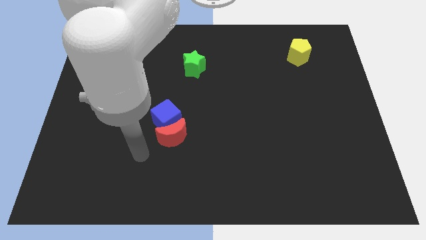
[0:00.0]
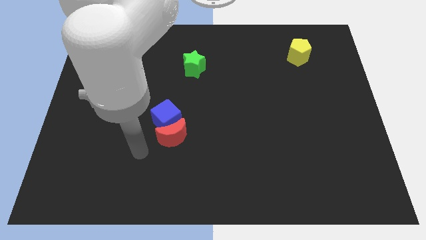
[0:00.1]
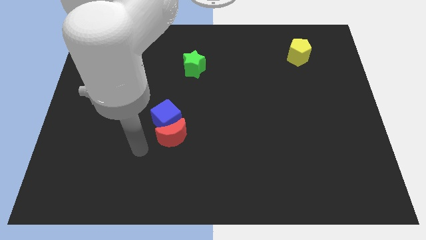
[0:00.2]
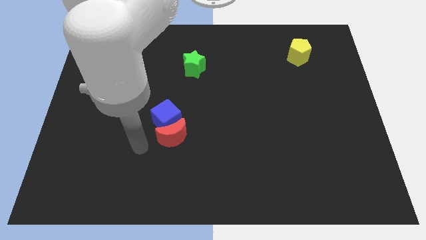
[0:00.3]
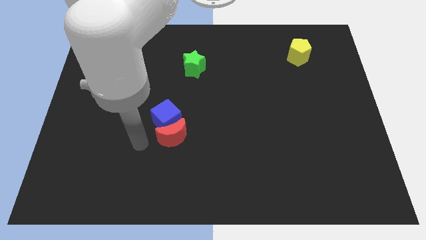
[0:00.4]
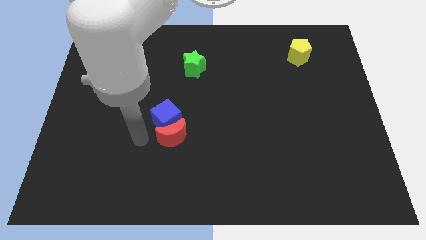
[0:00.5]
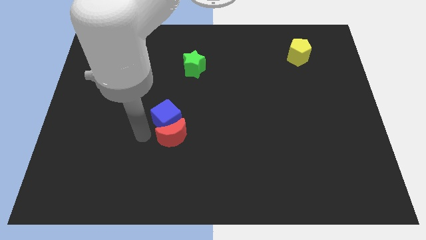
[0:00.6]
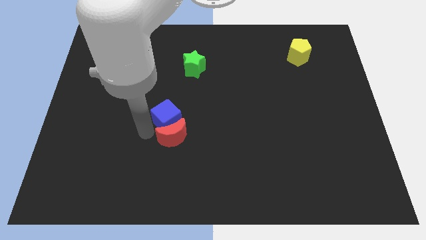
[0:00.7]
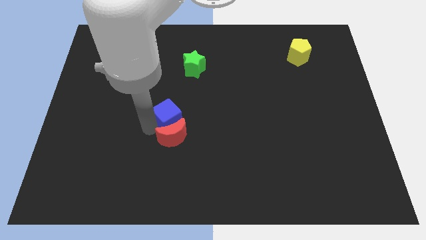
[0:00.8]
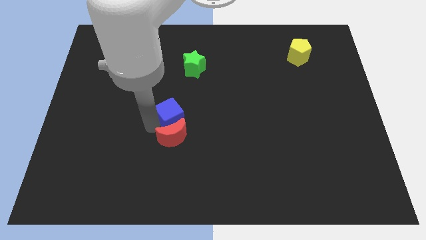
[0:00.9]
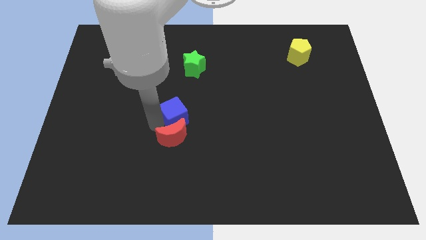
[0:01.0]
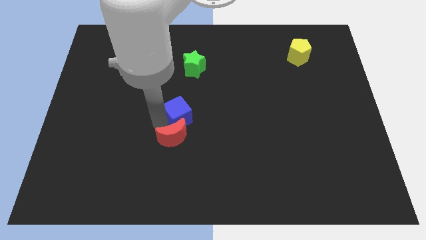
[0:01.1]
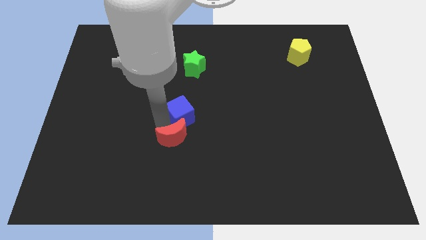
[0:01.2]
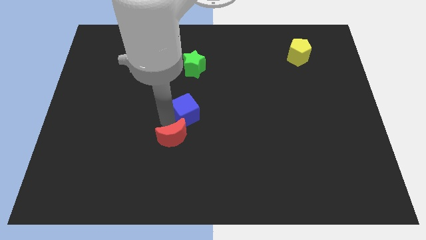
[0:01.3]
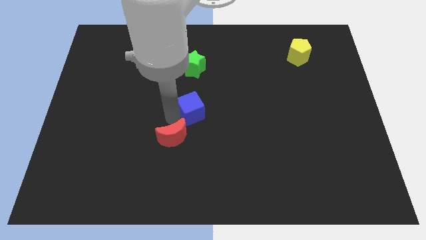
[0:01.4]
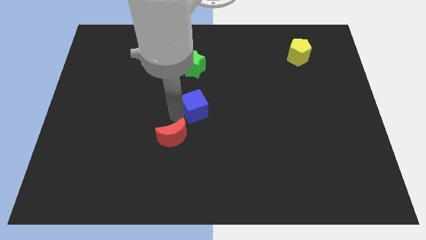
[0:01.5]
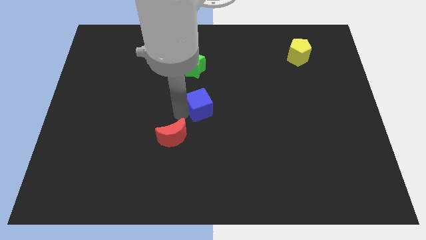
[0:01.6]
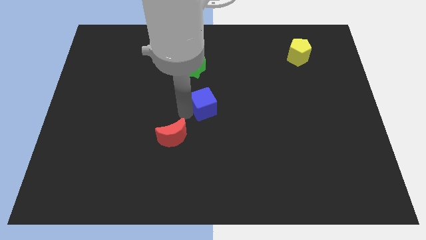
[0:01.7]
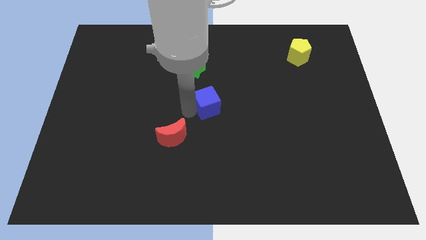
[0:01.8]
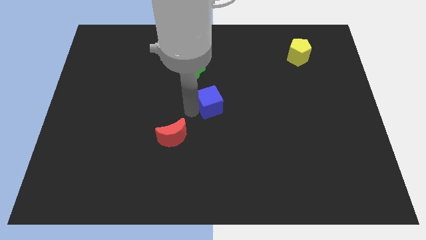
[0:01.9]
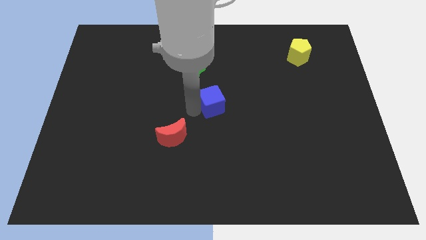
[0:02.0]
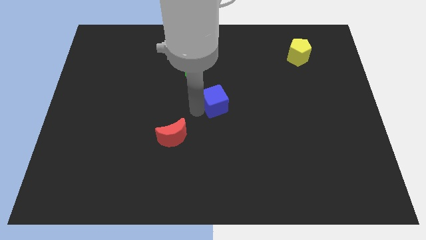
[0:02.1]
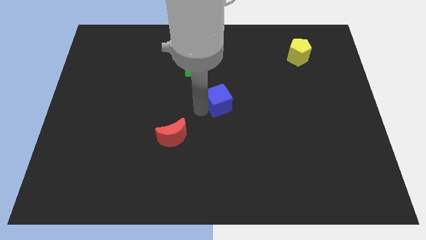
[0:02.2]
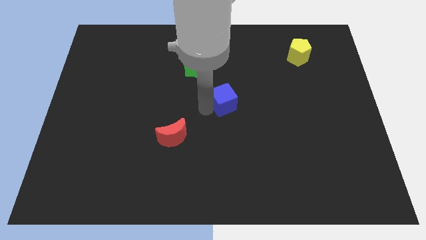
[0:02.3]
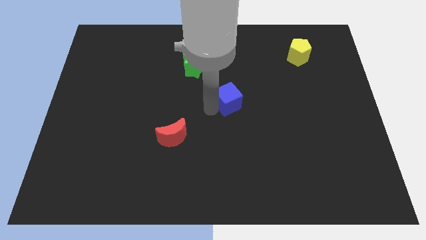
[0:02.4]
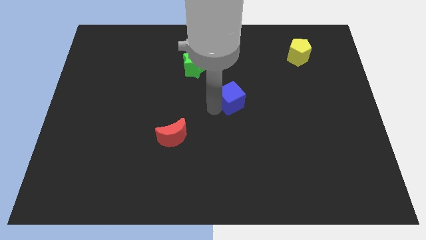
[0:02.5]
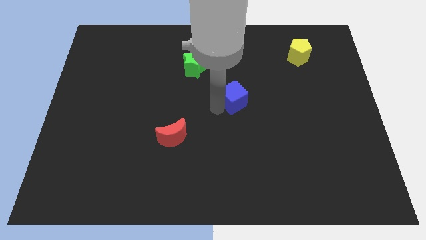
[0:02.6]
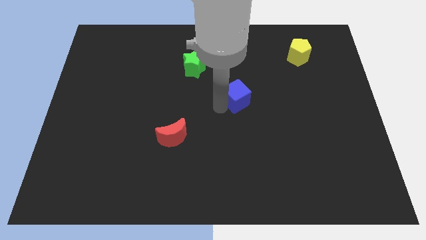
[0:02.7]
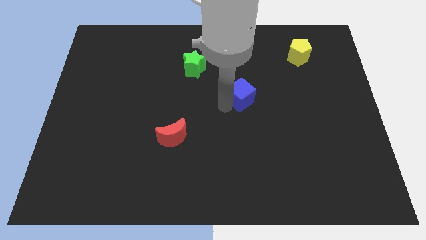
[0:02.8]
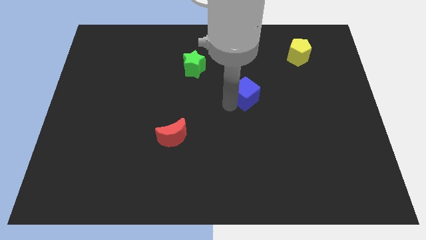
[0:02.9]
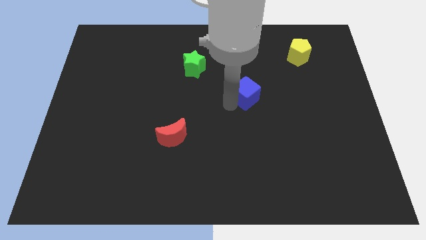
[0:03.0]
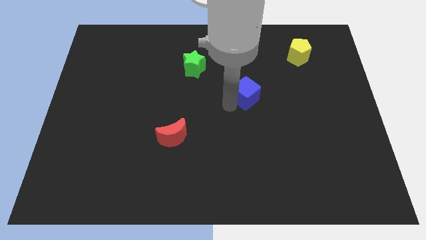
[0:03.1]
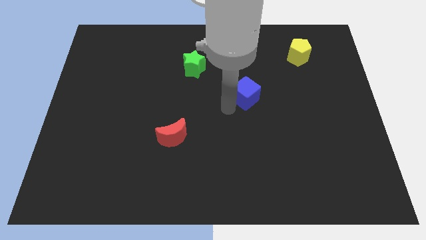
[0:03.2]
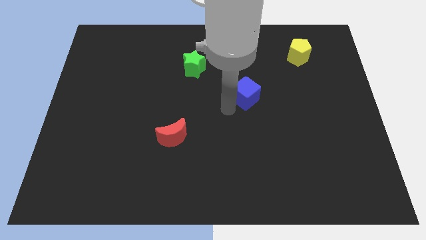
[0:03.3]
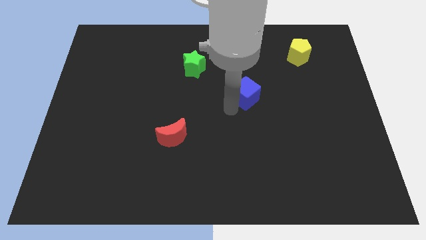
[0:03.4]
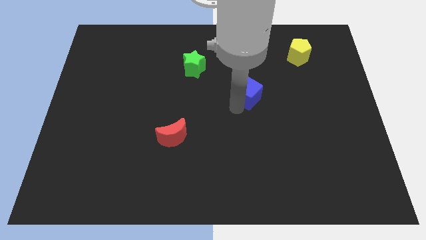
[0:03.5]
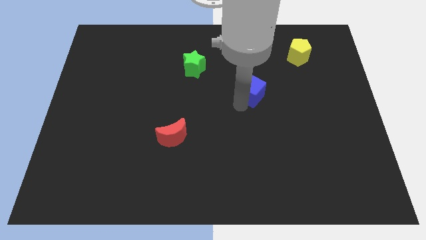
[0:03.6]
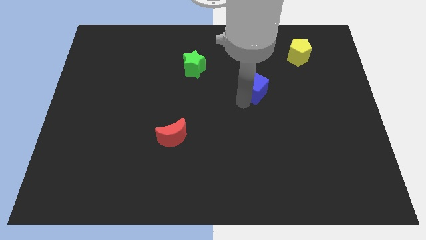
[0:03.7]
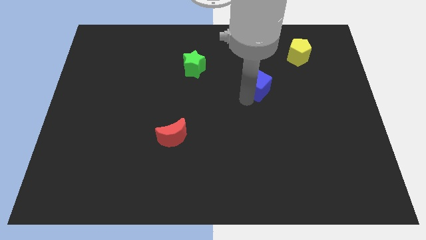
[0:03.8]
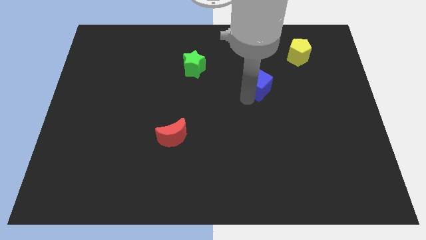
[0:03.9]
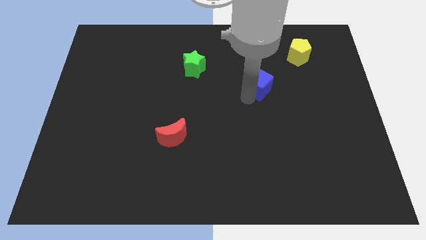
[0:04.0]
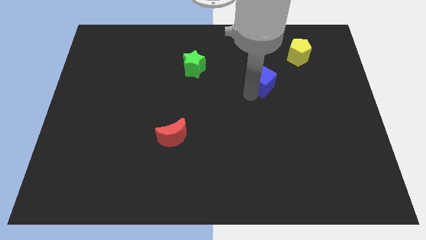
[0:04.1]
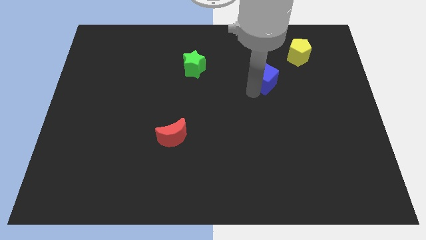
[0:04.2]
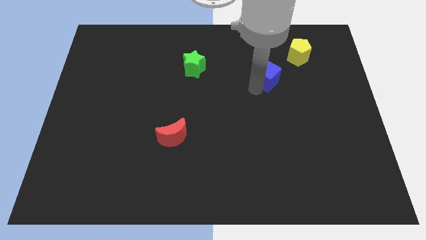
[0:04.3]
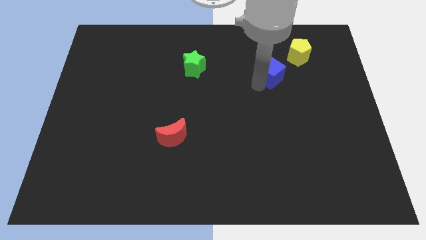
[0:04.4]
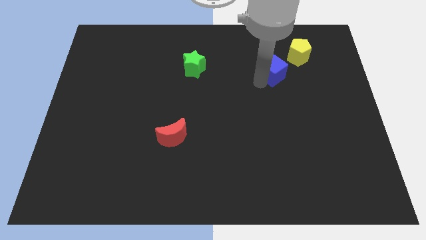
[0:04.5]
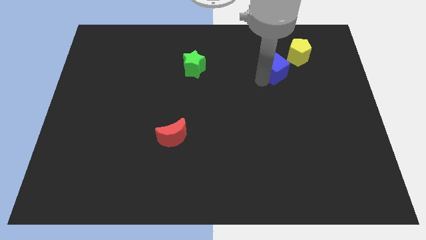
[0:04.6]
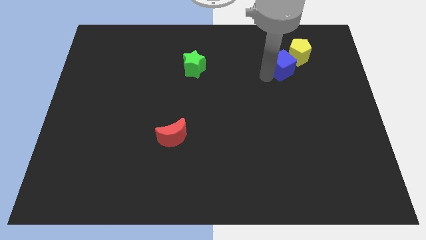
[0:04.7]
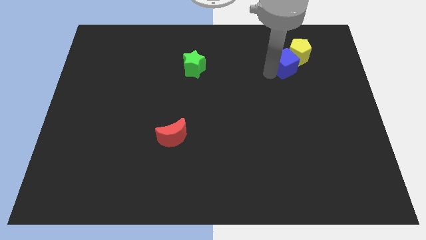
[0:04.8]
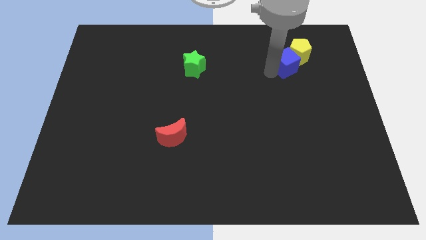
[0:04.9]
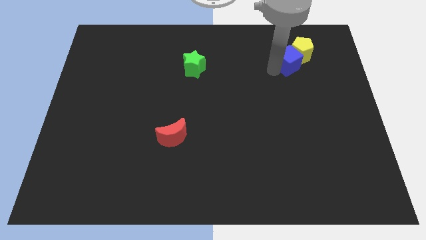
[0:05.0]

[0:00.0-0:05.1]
slide the blue block to the yellow block

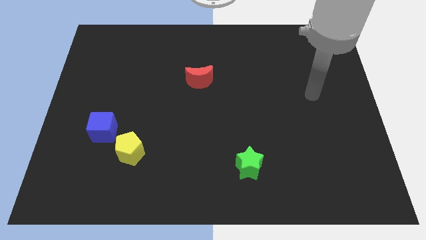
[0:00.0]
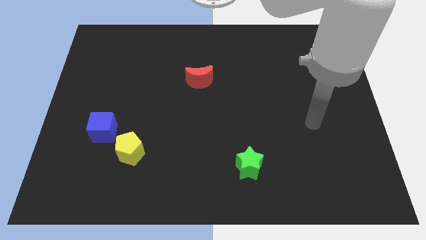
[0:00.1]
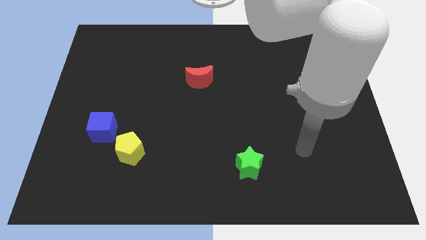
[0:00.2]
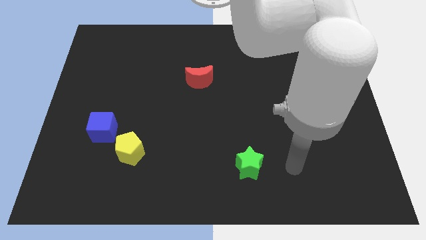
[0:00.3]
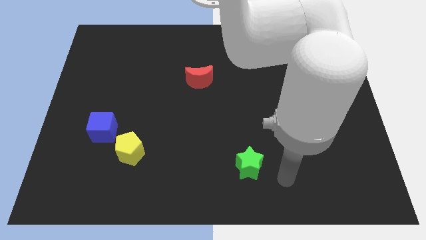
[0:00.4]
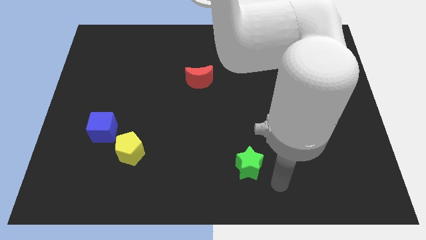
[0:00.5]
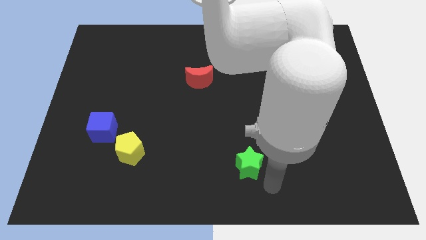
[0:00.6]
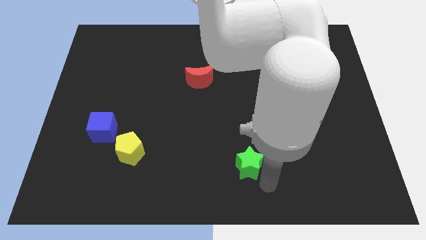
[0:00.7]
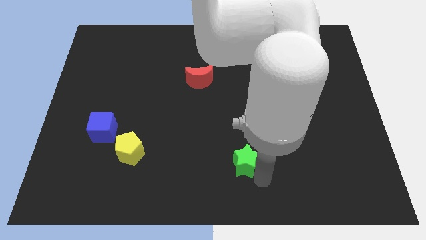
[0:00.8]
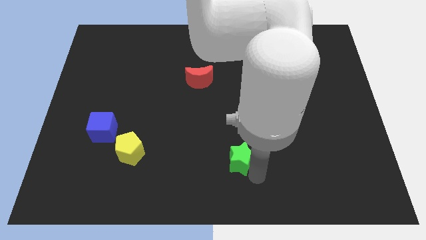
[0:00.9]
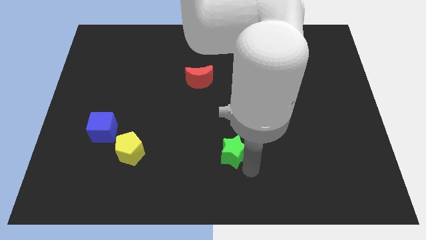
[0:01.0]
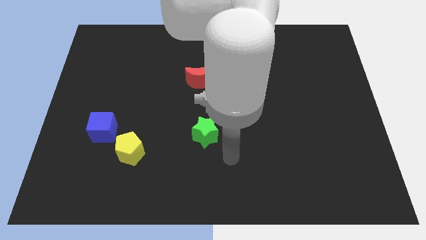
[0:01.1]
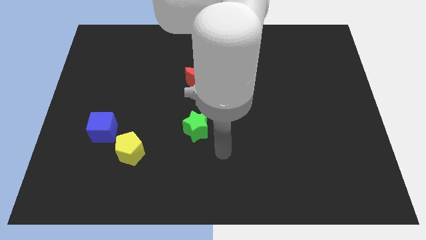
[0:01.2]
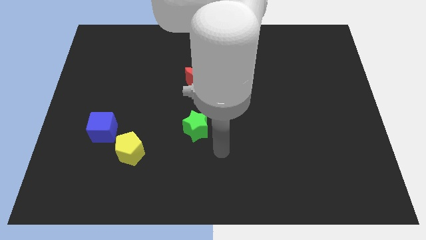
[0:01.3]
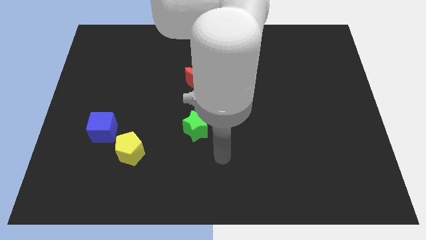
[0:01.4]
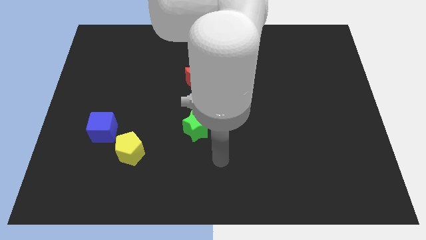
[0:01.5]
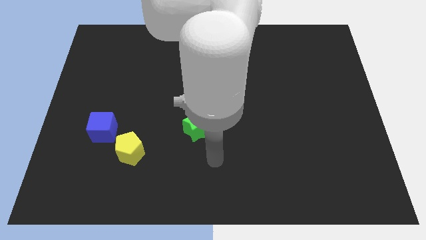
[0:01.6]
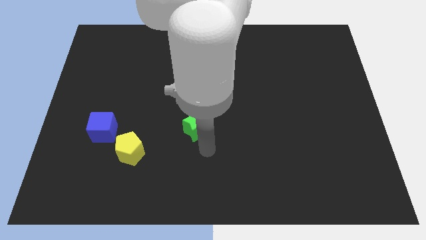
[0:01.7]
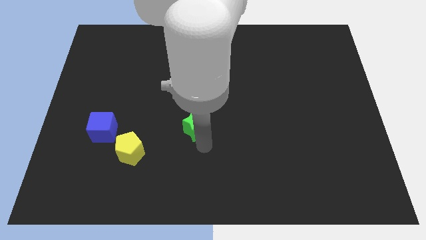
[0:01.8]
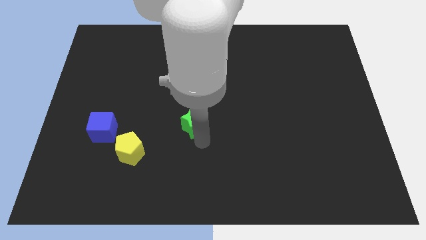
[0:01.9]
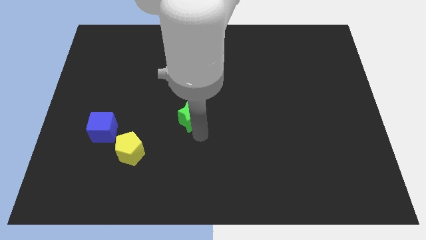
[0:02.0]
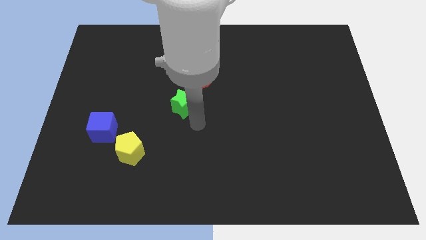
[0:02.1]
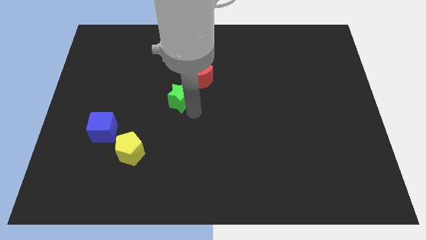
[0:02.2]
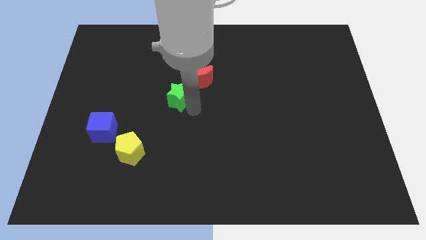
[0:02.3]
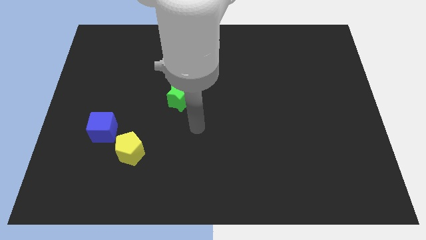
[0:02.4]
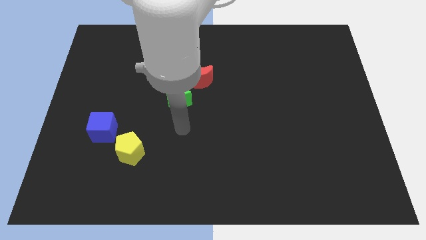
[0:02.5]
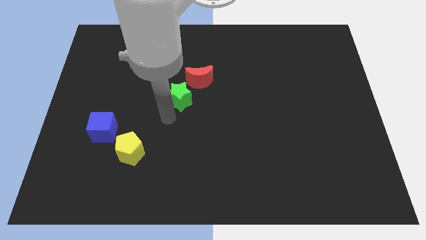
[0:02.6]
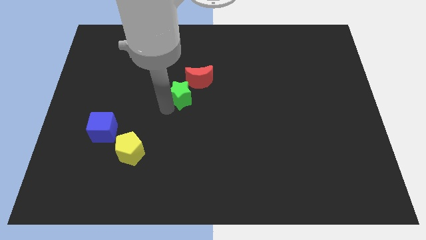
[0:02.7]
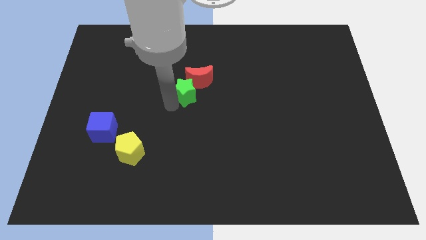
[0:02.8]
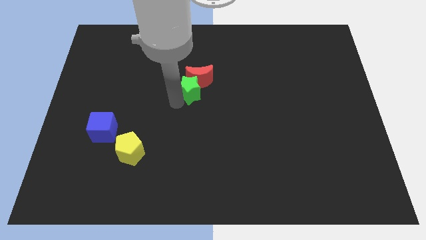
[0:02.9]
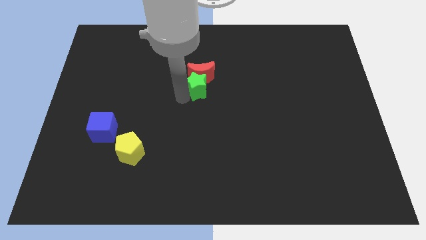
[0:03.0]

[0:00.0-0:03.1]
move the star close to the red block

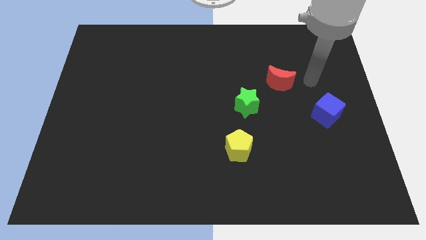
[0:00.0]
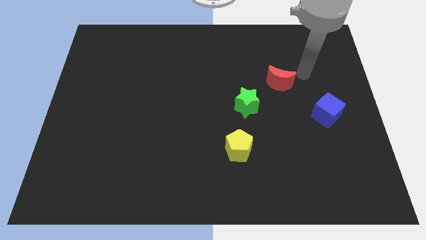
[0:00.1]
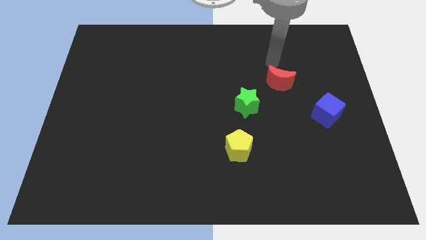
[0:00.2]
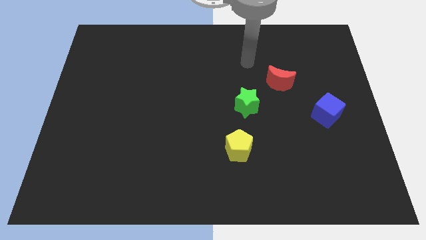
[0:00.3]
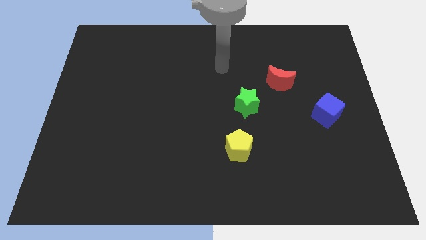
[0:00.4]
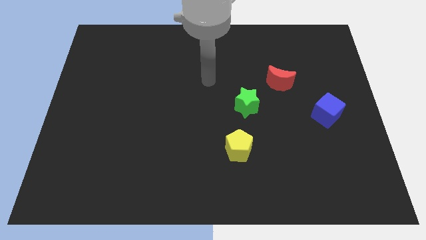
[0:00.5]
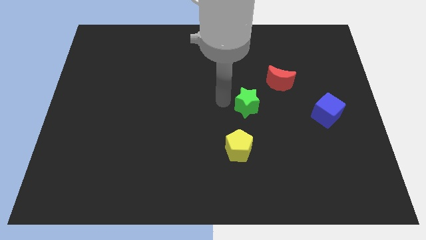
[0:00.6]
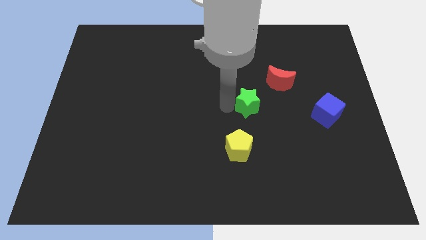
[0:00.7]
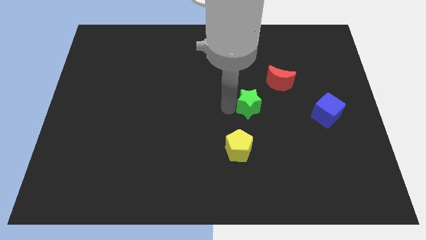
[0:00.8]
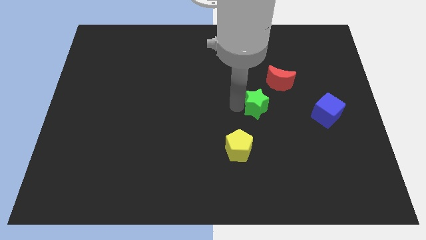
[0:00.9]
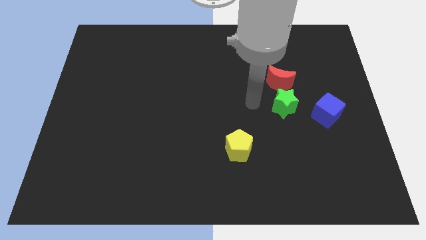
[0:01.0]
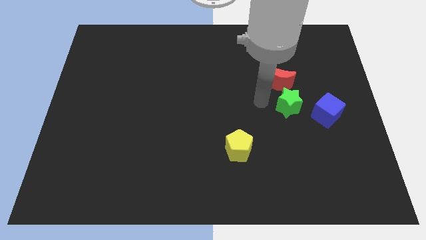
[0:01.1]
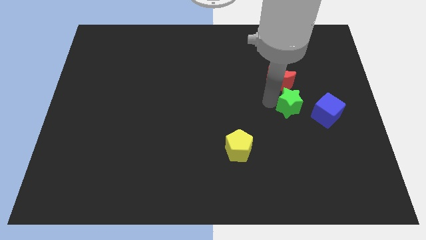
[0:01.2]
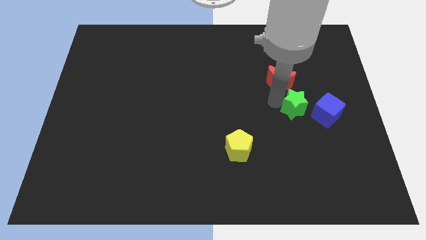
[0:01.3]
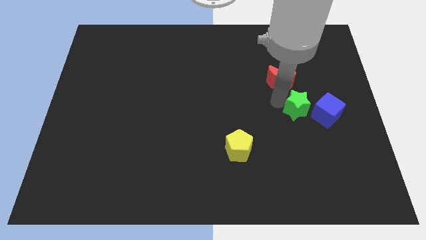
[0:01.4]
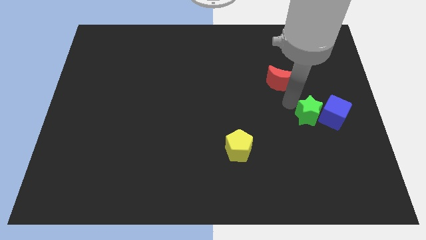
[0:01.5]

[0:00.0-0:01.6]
push the star close to the blue cube
